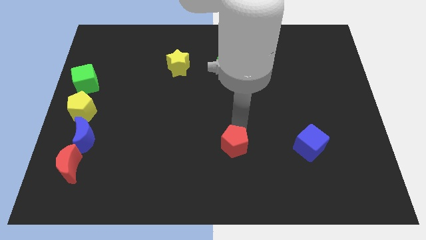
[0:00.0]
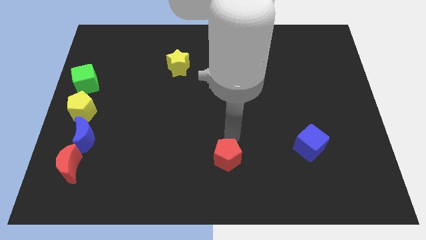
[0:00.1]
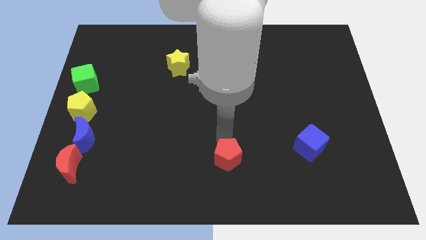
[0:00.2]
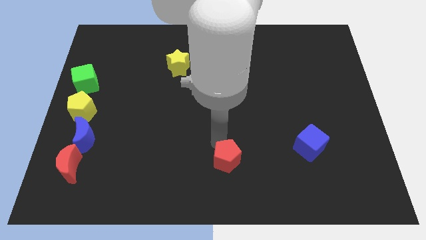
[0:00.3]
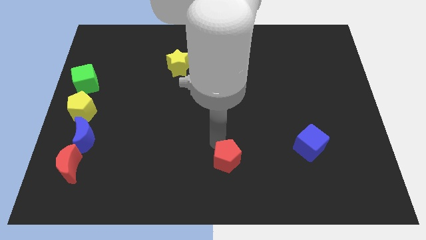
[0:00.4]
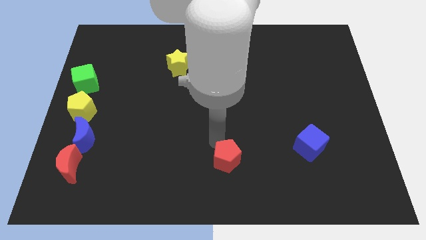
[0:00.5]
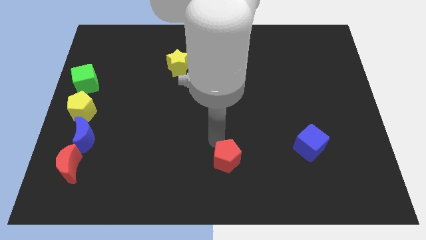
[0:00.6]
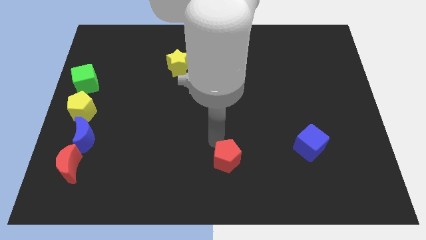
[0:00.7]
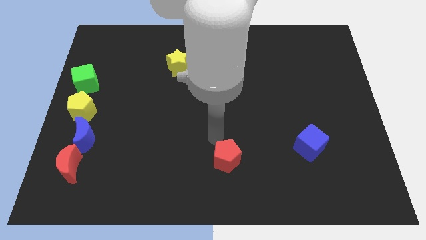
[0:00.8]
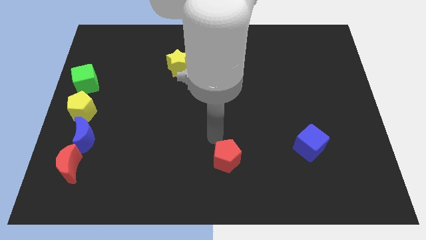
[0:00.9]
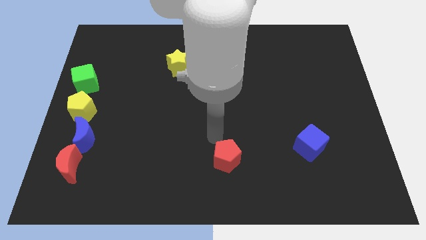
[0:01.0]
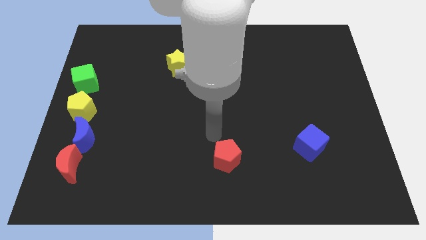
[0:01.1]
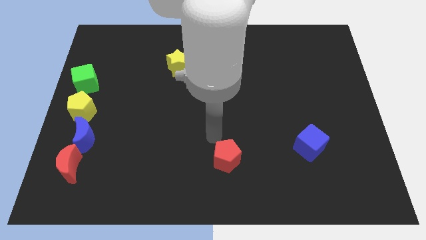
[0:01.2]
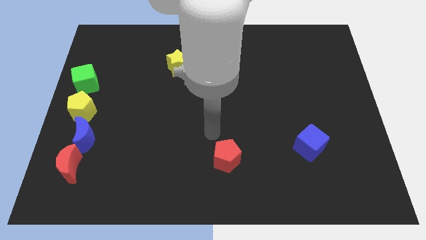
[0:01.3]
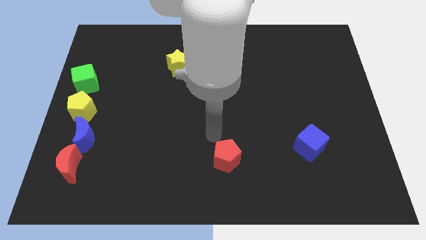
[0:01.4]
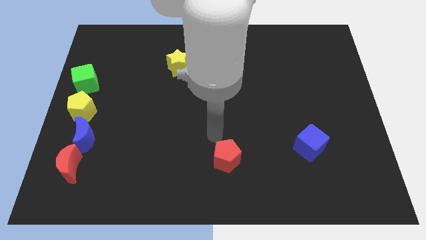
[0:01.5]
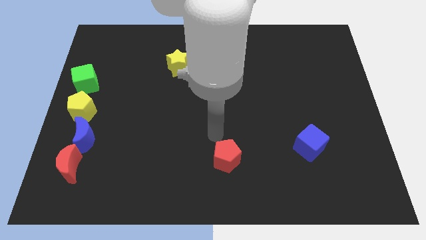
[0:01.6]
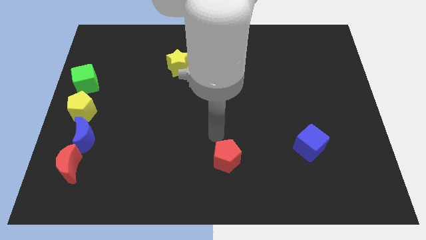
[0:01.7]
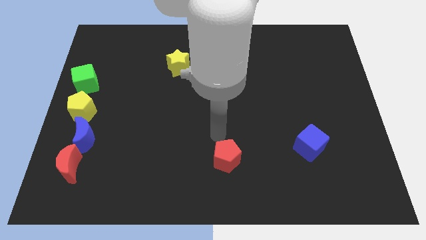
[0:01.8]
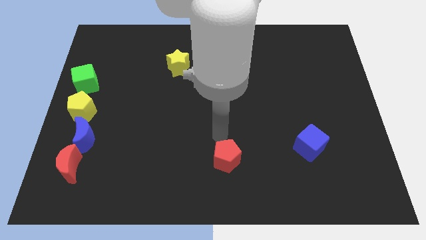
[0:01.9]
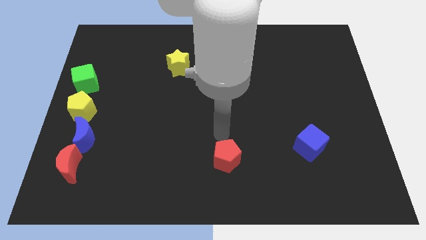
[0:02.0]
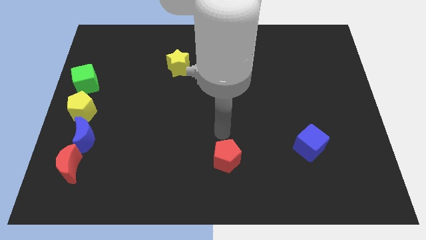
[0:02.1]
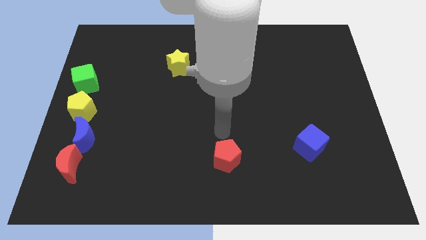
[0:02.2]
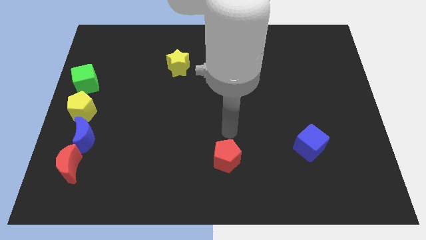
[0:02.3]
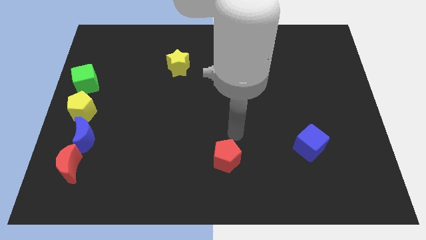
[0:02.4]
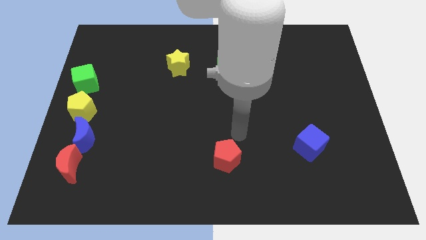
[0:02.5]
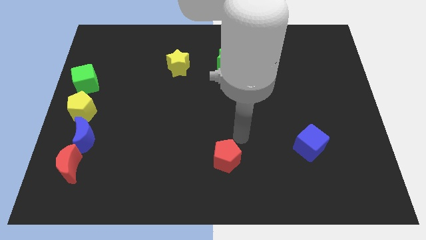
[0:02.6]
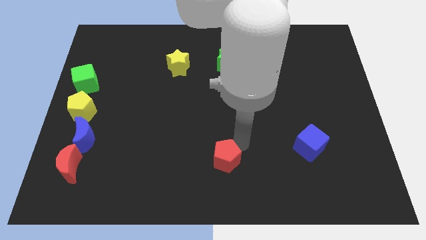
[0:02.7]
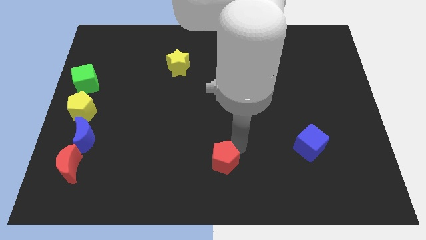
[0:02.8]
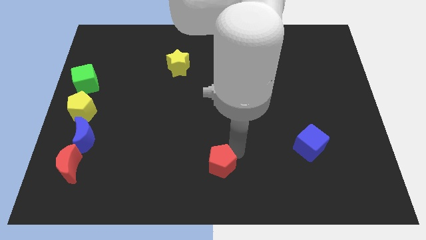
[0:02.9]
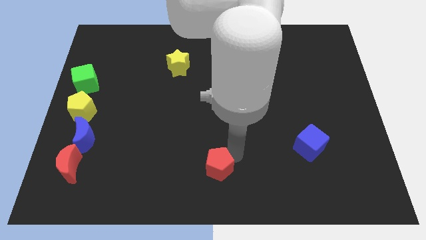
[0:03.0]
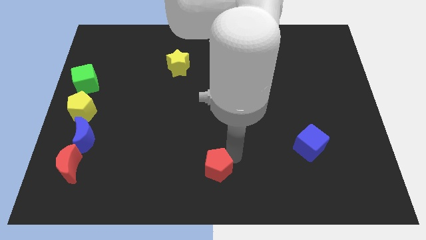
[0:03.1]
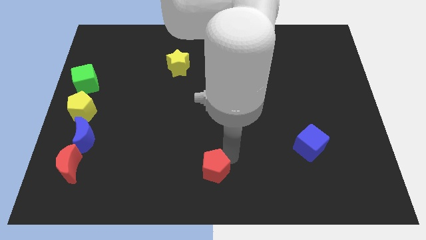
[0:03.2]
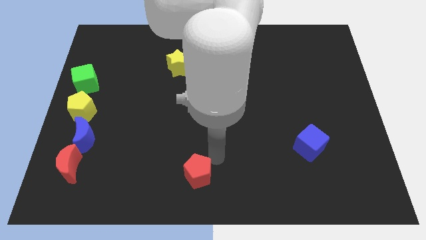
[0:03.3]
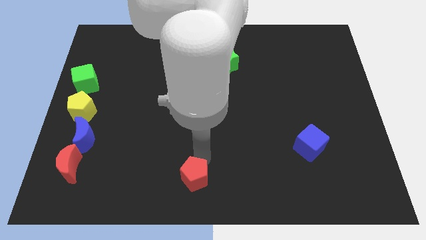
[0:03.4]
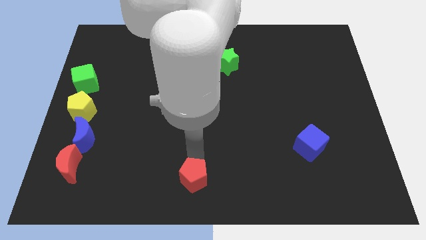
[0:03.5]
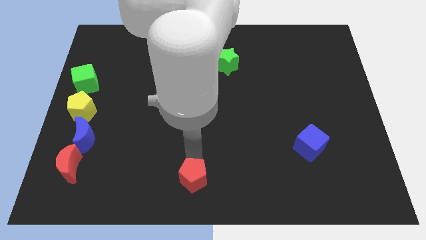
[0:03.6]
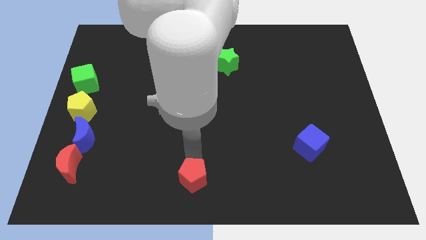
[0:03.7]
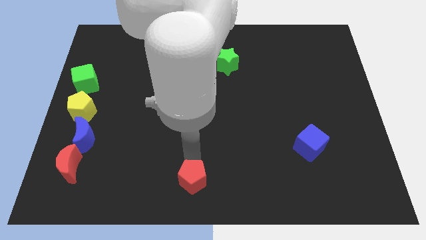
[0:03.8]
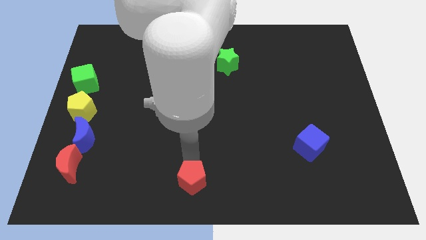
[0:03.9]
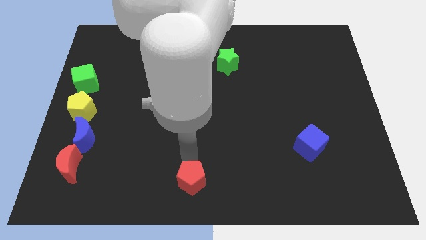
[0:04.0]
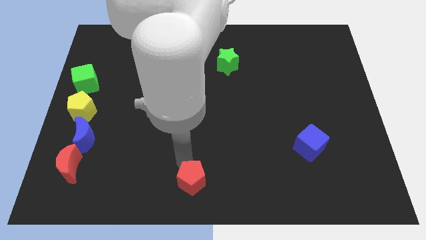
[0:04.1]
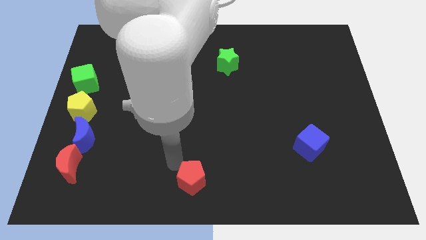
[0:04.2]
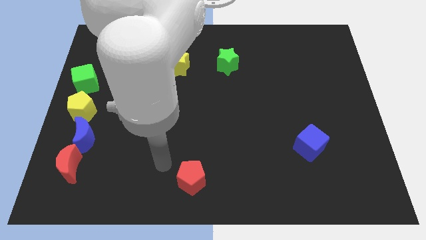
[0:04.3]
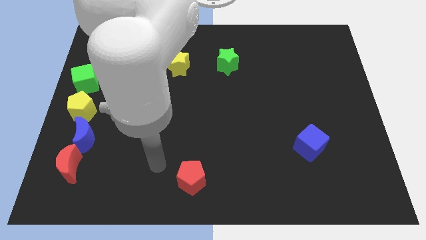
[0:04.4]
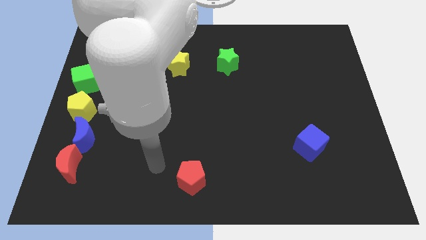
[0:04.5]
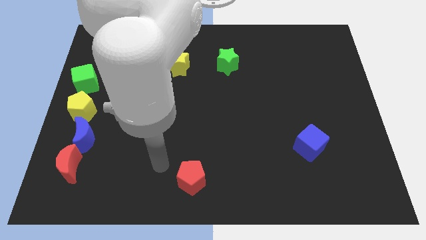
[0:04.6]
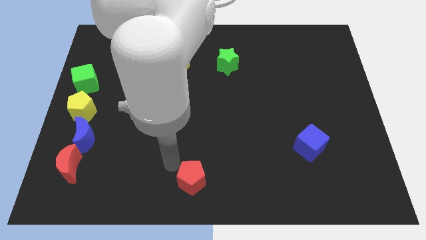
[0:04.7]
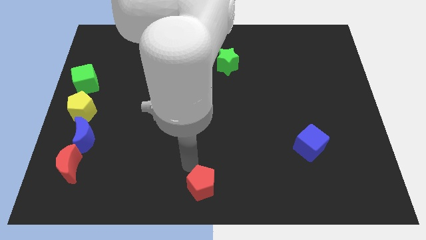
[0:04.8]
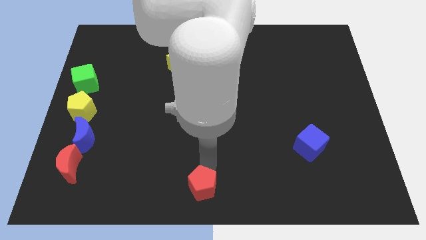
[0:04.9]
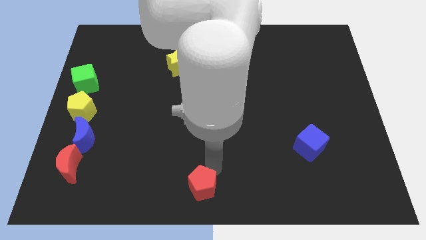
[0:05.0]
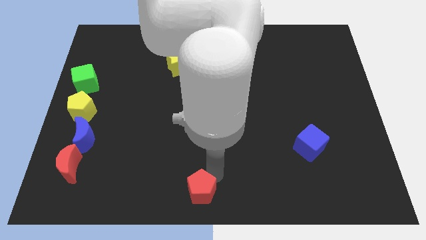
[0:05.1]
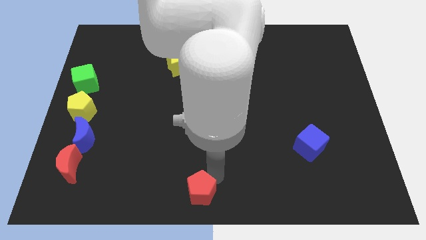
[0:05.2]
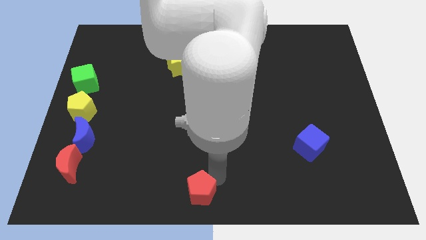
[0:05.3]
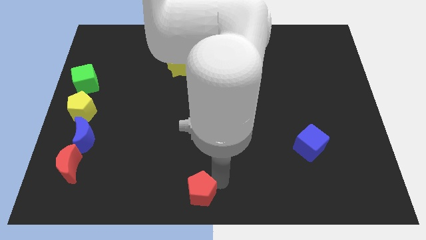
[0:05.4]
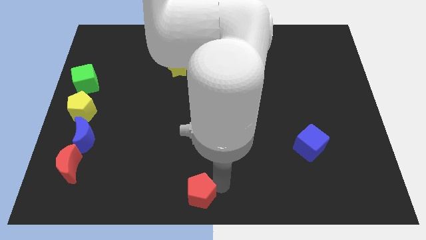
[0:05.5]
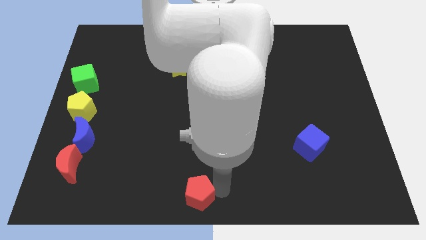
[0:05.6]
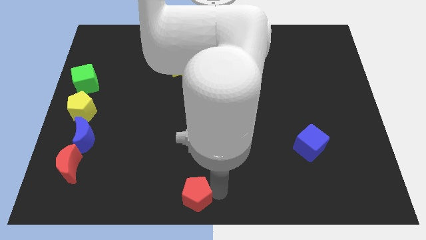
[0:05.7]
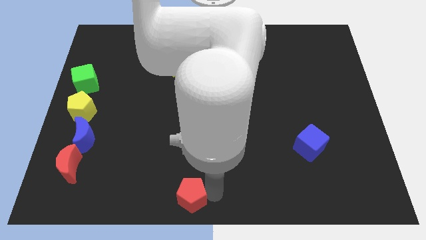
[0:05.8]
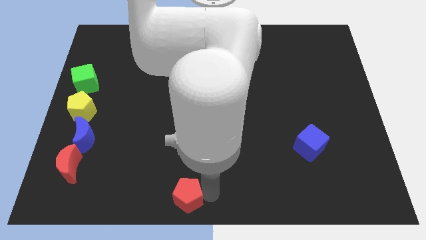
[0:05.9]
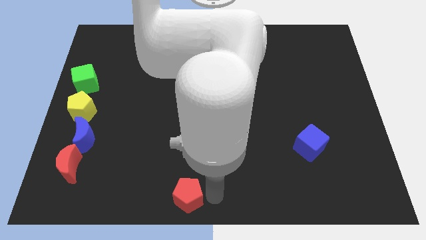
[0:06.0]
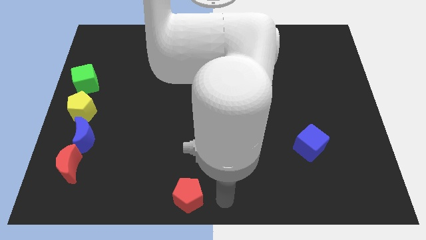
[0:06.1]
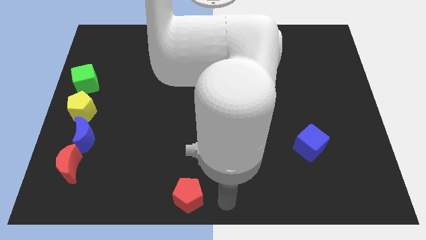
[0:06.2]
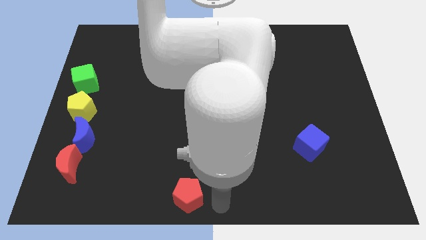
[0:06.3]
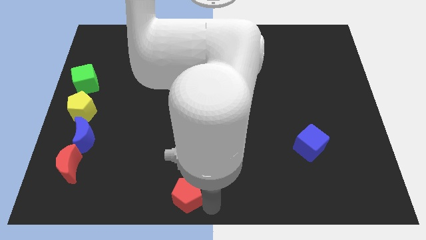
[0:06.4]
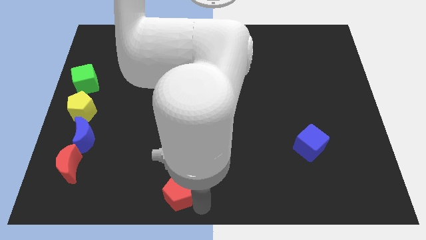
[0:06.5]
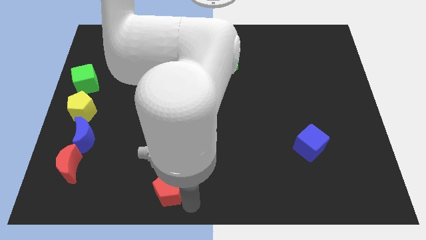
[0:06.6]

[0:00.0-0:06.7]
slide the red pentagon vertically to the bottom of the yellow star

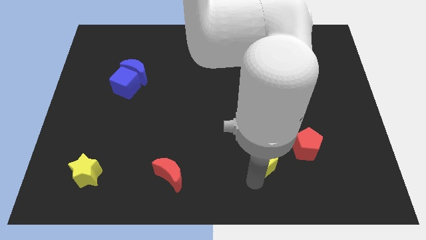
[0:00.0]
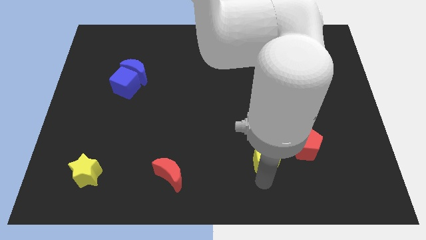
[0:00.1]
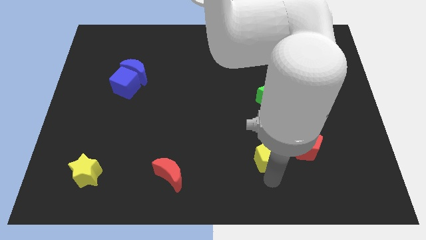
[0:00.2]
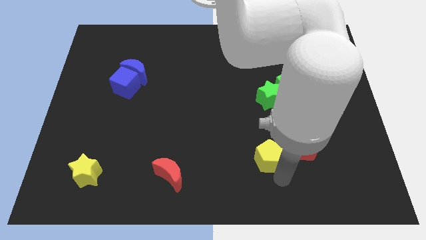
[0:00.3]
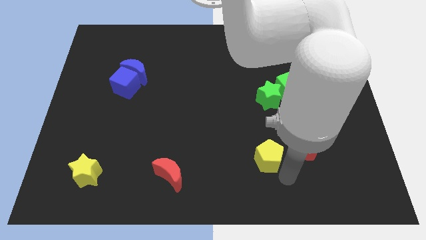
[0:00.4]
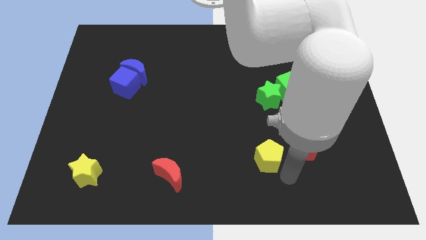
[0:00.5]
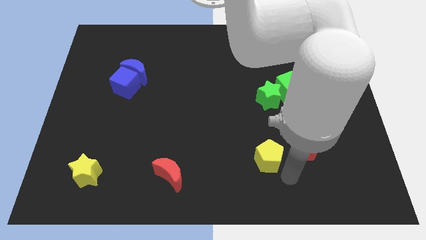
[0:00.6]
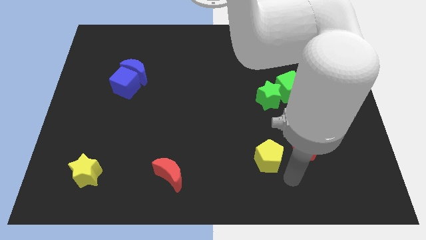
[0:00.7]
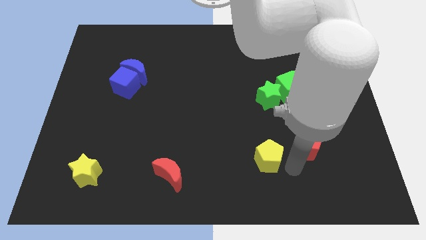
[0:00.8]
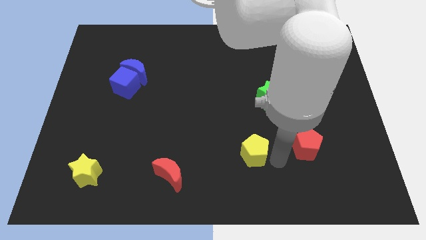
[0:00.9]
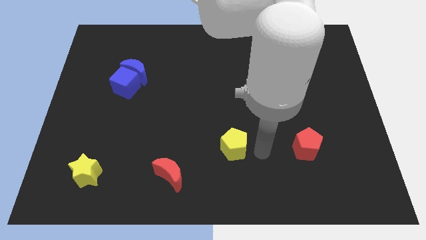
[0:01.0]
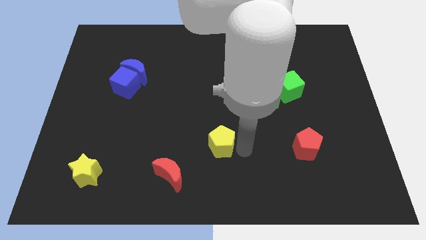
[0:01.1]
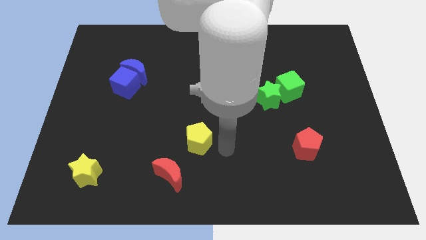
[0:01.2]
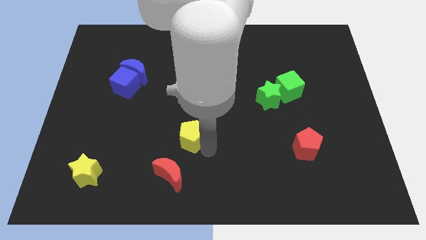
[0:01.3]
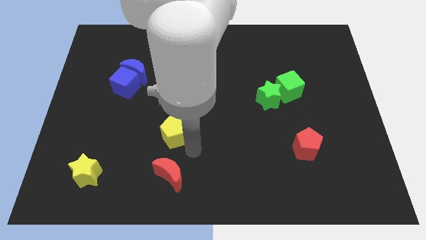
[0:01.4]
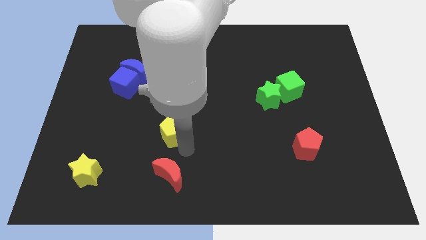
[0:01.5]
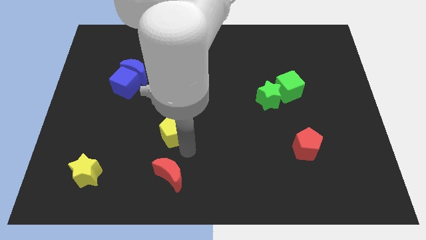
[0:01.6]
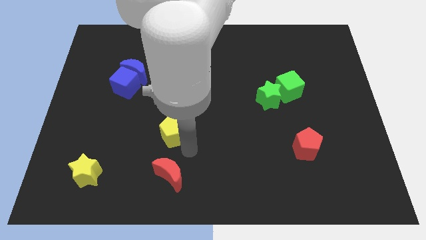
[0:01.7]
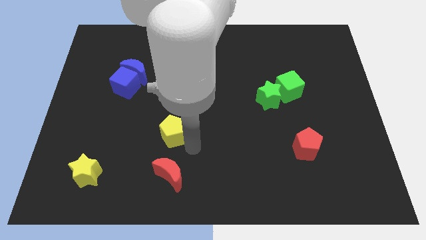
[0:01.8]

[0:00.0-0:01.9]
slide the yellow pentagon above the red moon

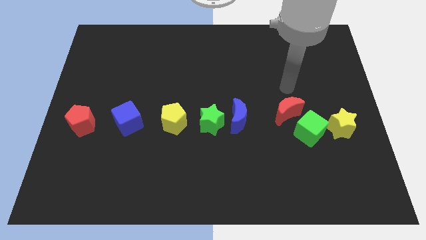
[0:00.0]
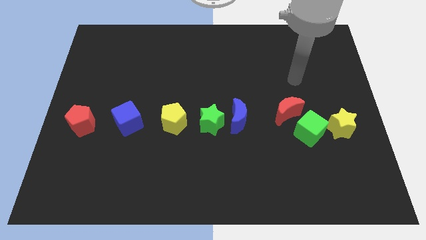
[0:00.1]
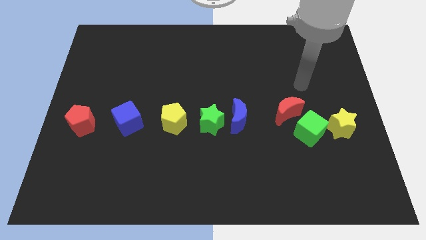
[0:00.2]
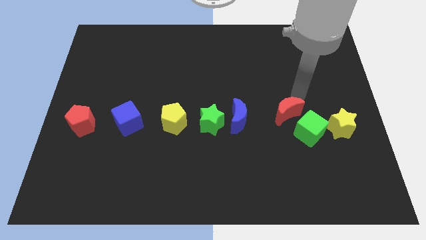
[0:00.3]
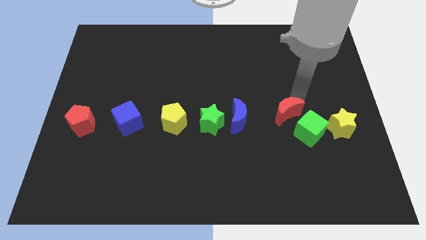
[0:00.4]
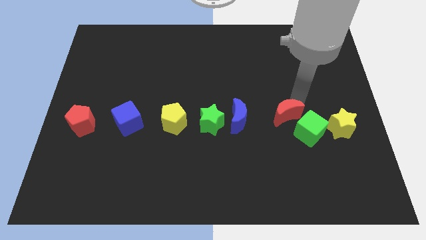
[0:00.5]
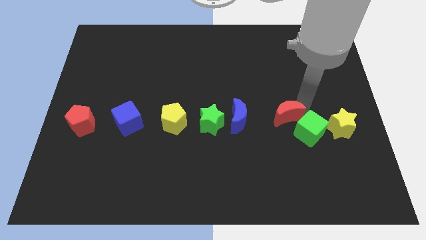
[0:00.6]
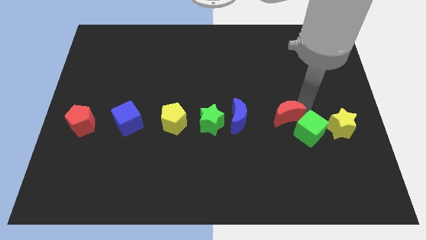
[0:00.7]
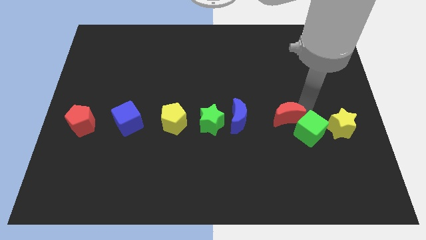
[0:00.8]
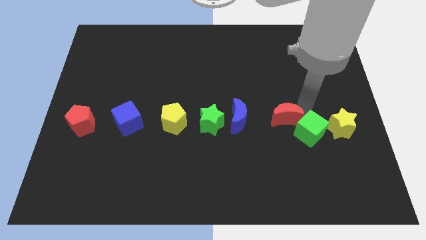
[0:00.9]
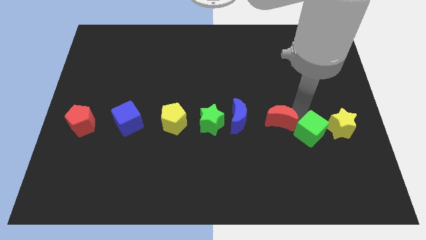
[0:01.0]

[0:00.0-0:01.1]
make the red moon touch the left side of the green cube
